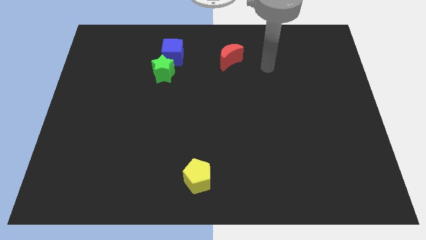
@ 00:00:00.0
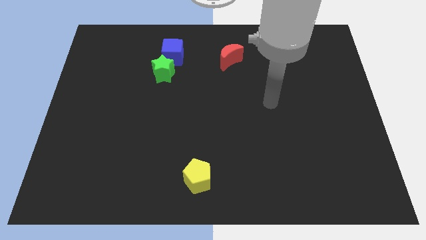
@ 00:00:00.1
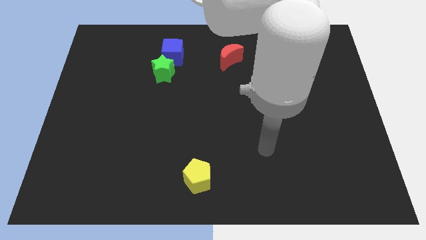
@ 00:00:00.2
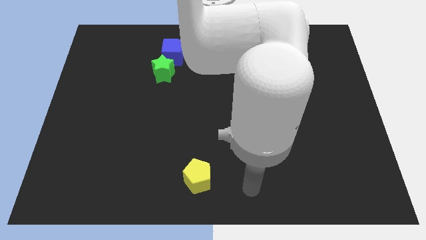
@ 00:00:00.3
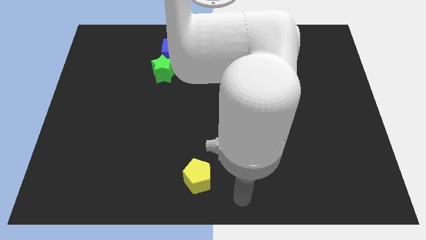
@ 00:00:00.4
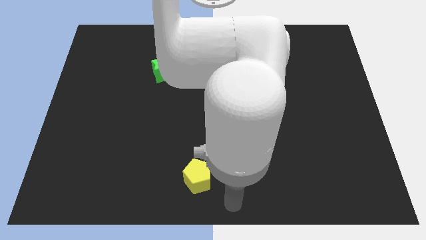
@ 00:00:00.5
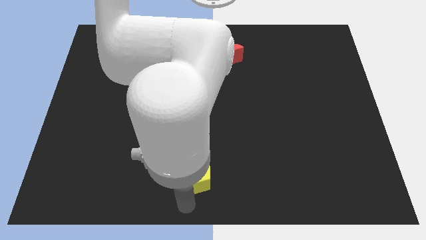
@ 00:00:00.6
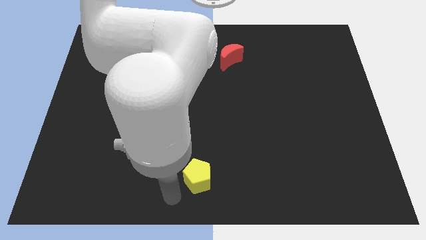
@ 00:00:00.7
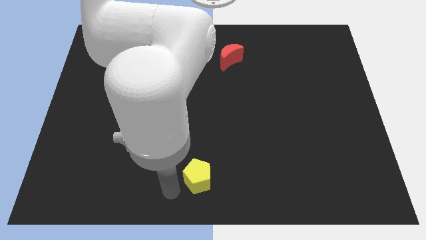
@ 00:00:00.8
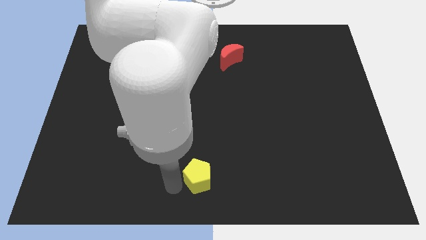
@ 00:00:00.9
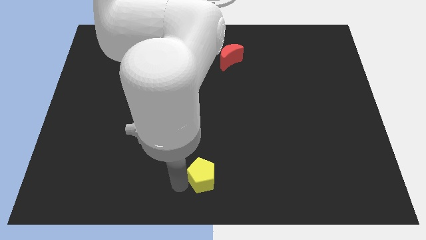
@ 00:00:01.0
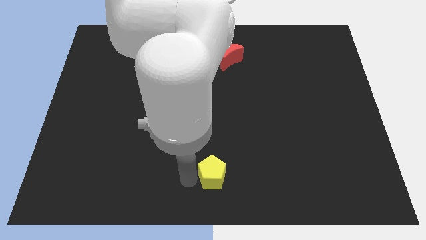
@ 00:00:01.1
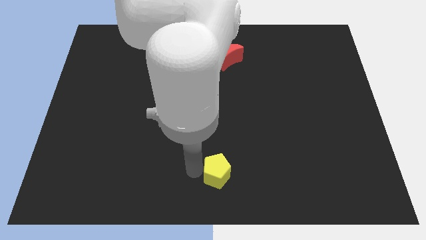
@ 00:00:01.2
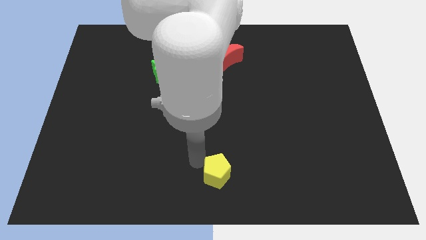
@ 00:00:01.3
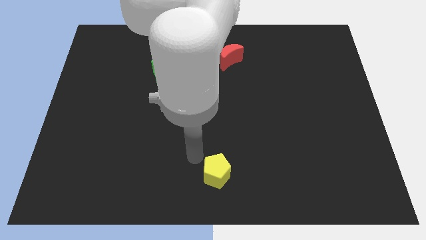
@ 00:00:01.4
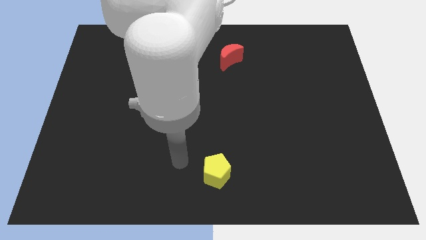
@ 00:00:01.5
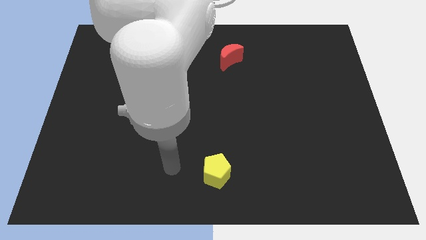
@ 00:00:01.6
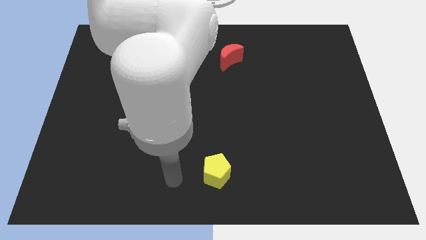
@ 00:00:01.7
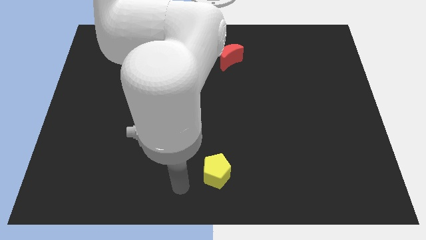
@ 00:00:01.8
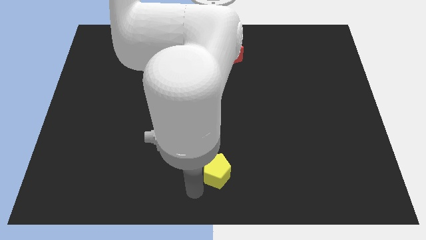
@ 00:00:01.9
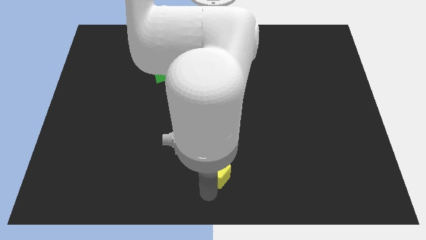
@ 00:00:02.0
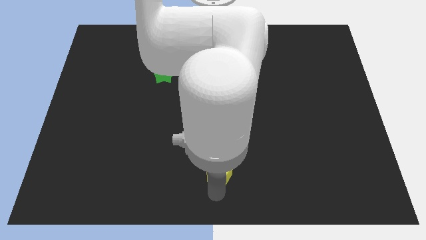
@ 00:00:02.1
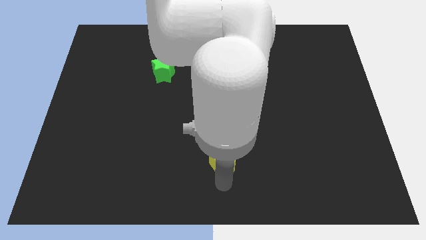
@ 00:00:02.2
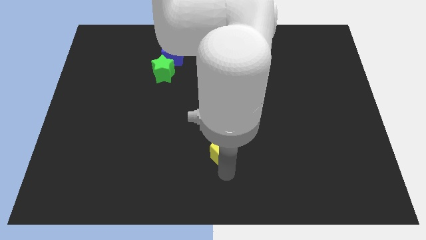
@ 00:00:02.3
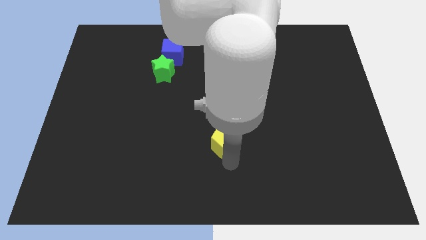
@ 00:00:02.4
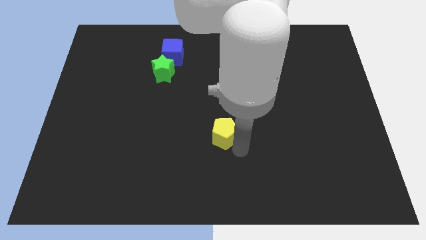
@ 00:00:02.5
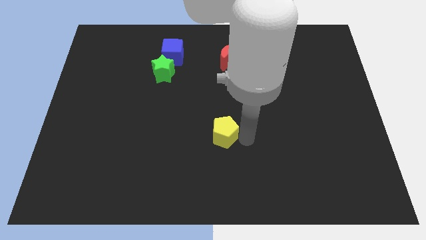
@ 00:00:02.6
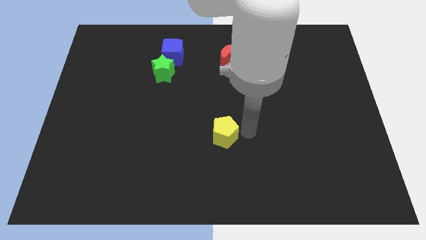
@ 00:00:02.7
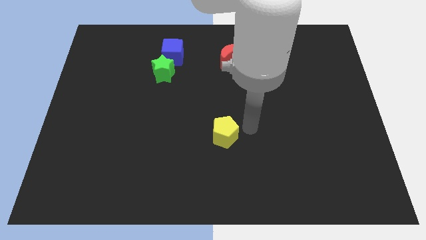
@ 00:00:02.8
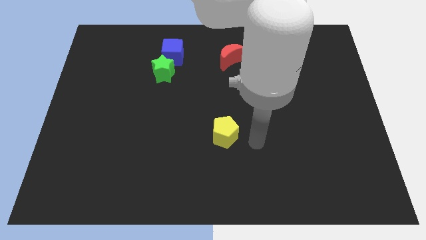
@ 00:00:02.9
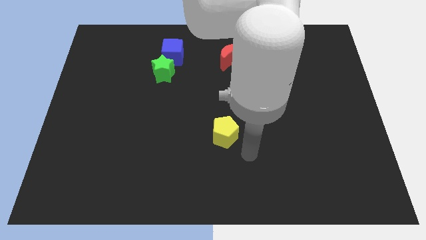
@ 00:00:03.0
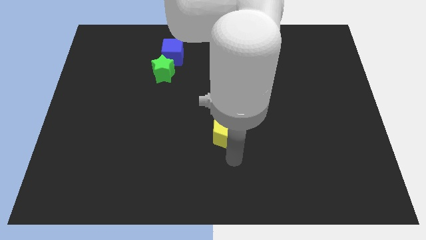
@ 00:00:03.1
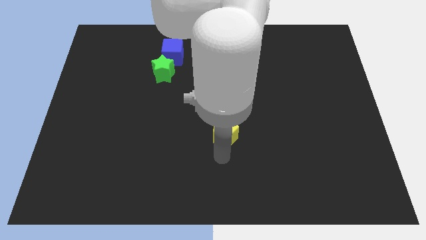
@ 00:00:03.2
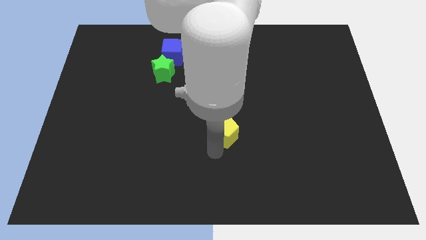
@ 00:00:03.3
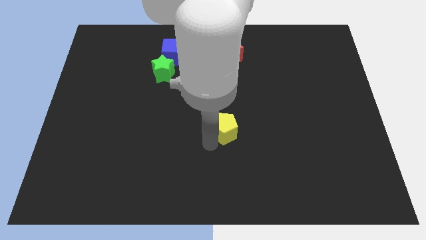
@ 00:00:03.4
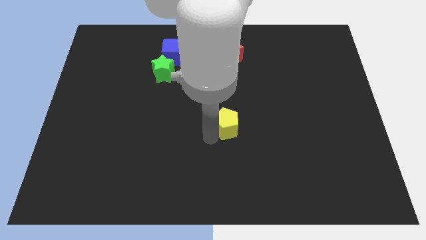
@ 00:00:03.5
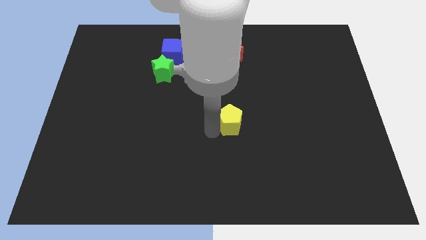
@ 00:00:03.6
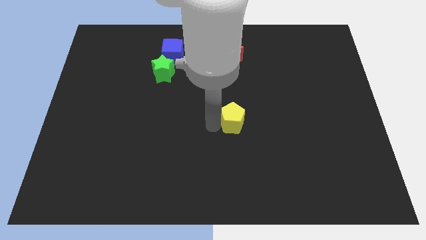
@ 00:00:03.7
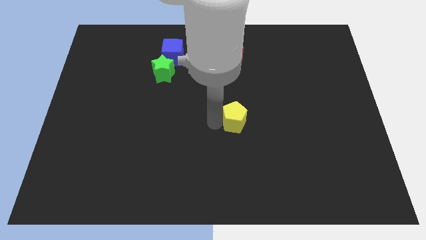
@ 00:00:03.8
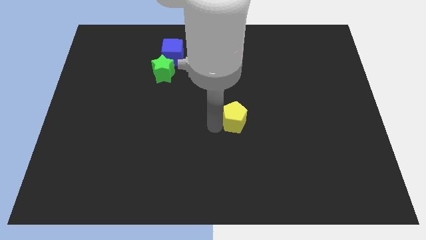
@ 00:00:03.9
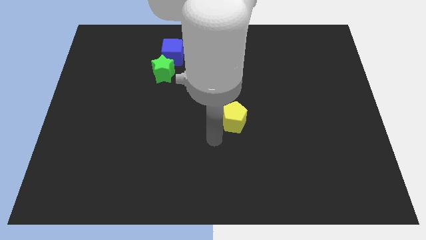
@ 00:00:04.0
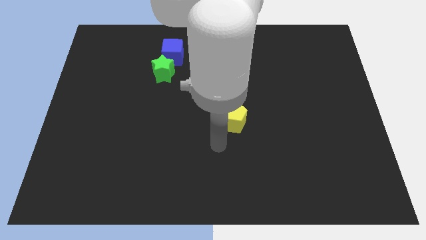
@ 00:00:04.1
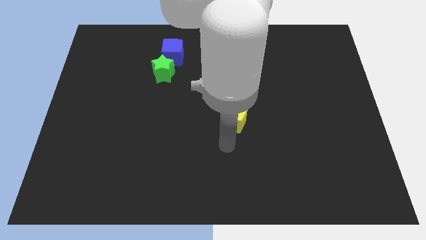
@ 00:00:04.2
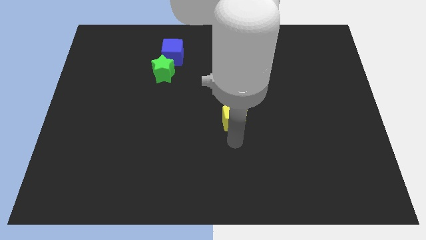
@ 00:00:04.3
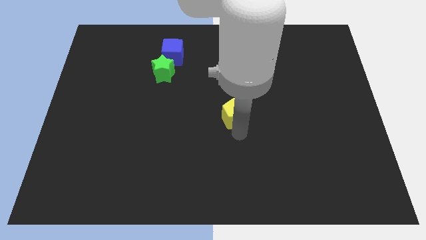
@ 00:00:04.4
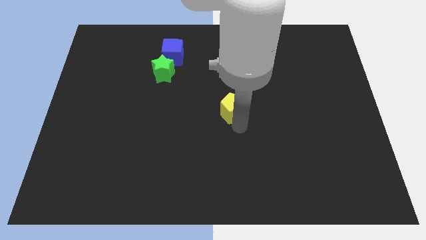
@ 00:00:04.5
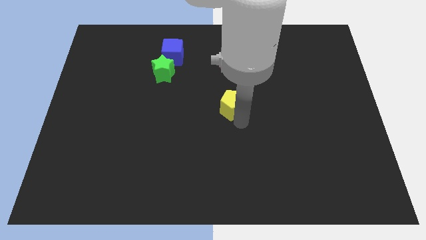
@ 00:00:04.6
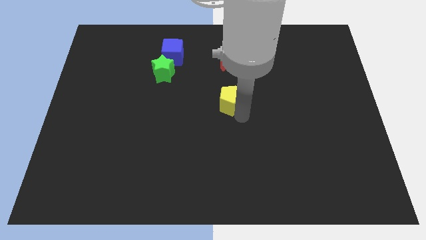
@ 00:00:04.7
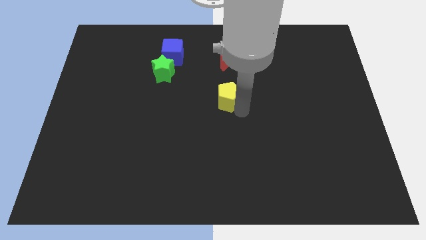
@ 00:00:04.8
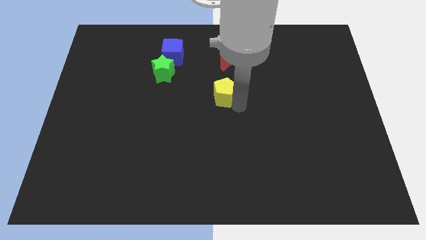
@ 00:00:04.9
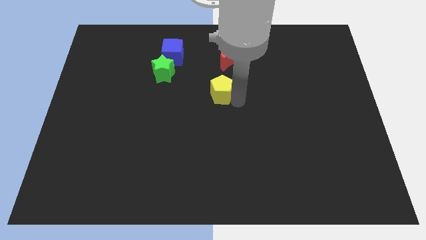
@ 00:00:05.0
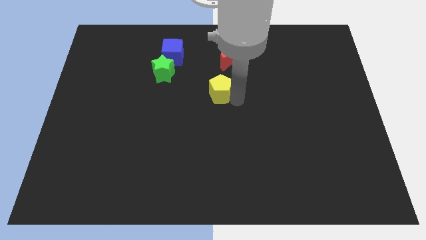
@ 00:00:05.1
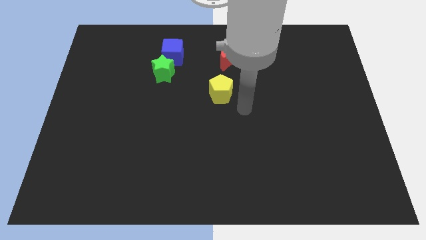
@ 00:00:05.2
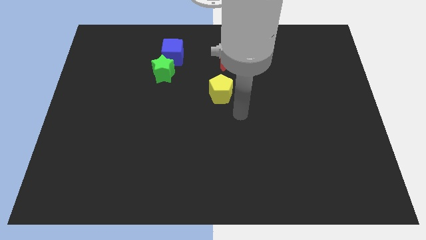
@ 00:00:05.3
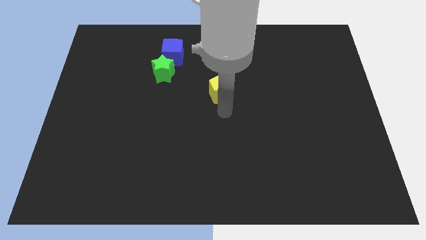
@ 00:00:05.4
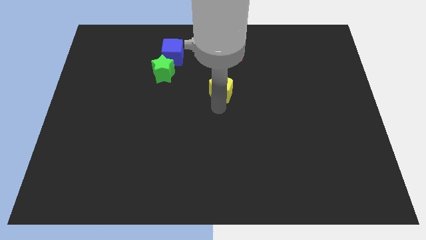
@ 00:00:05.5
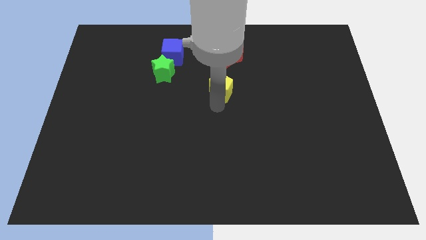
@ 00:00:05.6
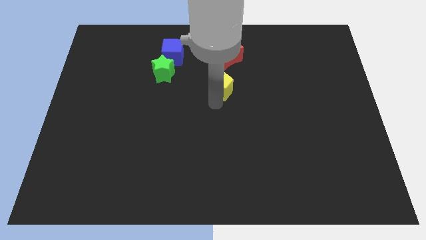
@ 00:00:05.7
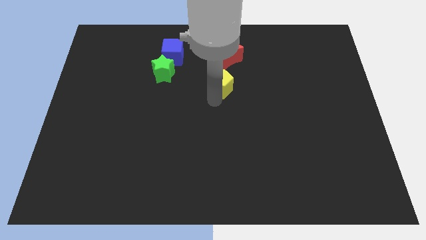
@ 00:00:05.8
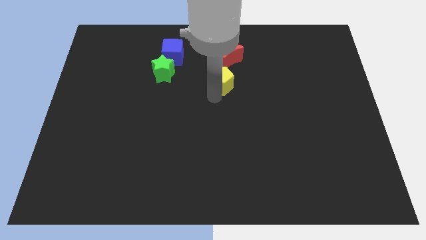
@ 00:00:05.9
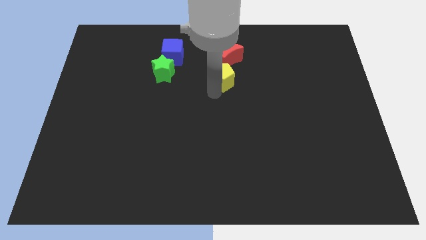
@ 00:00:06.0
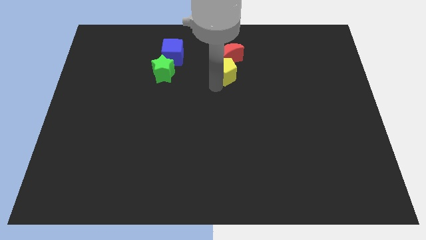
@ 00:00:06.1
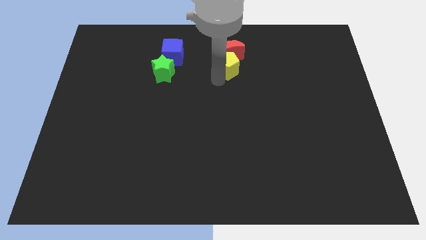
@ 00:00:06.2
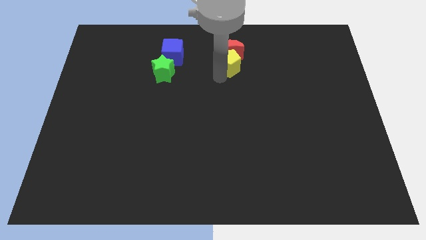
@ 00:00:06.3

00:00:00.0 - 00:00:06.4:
push the yellow pentagon towards the red moon

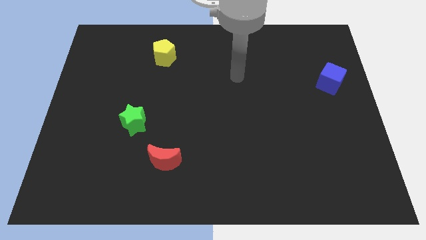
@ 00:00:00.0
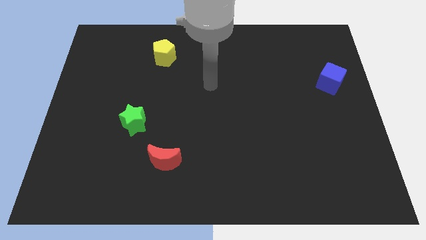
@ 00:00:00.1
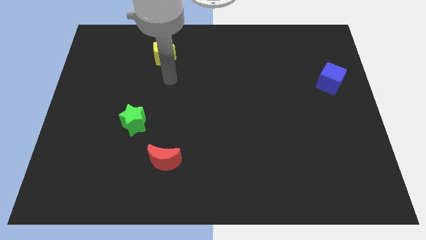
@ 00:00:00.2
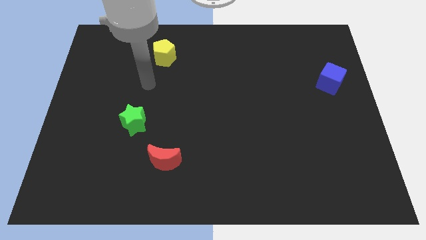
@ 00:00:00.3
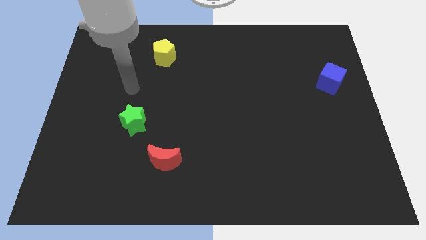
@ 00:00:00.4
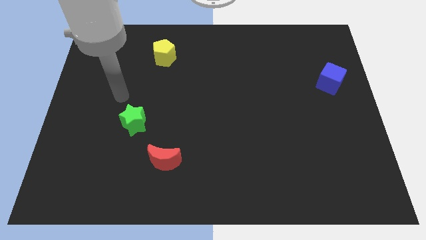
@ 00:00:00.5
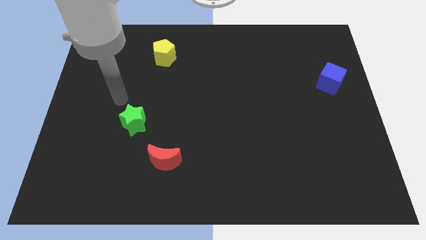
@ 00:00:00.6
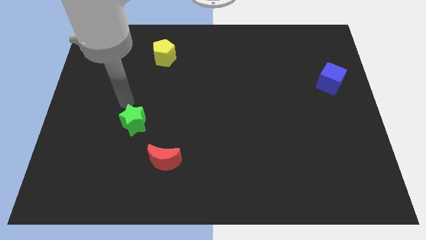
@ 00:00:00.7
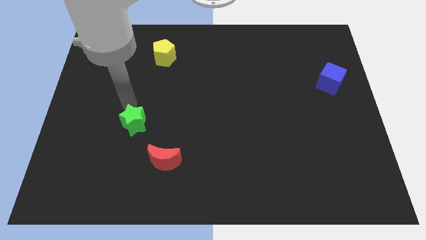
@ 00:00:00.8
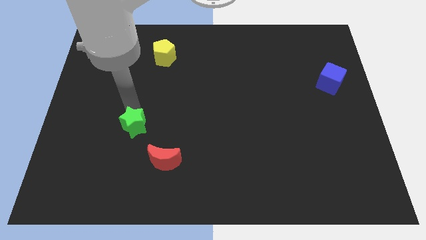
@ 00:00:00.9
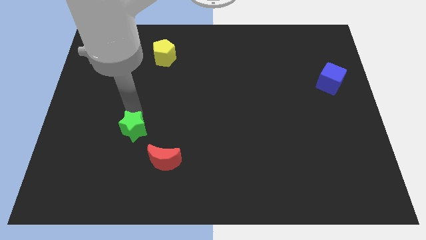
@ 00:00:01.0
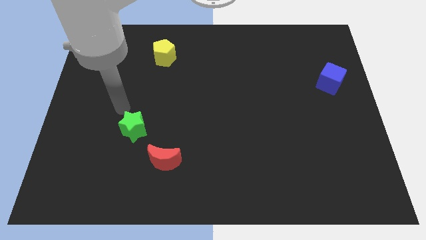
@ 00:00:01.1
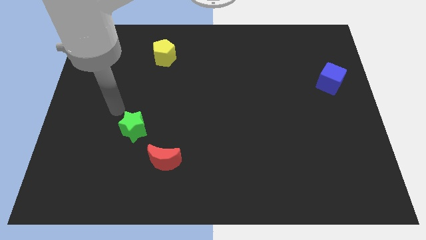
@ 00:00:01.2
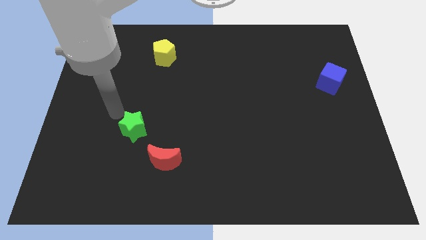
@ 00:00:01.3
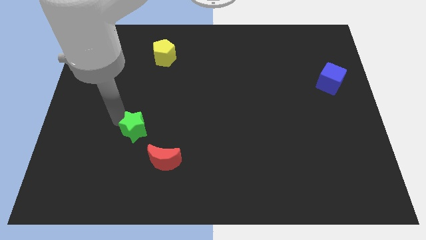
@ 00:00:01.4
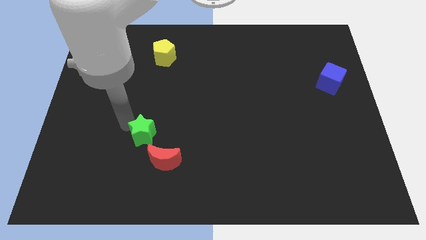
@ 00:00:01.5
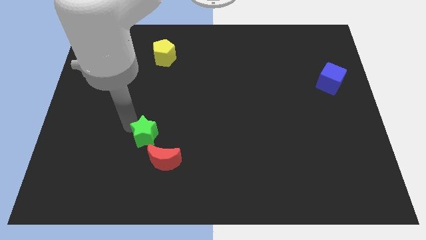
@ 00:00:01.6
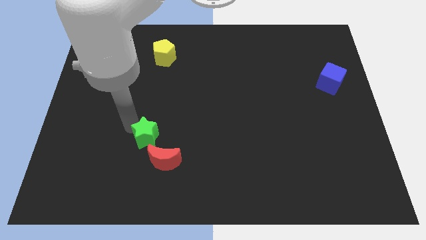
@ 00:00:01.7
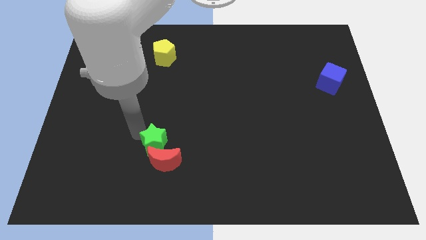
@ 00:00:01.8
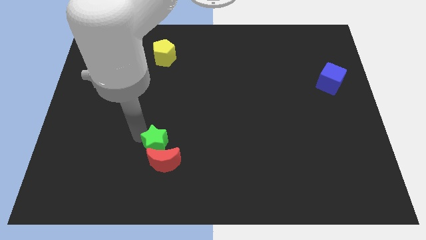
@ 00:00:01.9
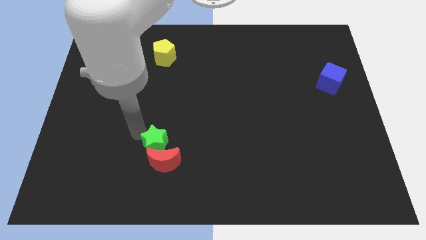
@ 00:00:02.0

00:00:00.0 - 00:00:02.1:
put the star close to the moon
